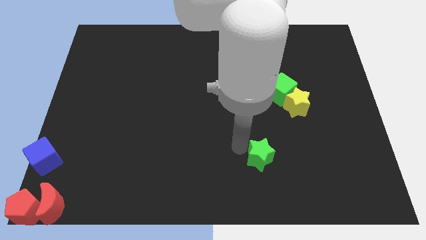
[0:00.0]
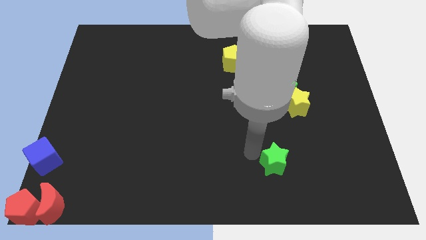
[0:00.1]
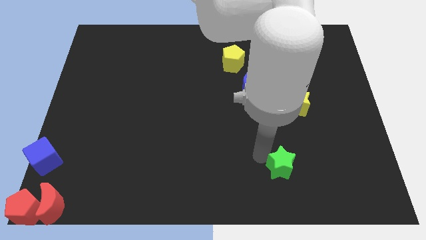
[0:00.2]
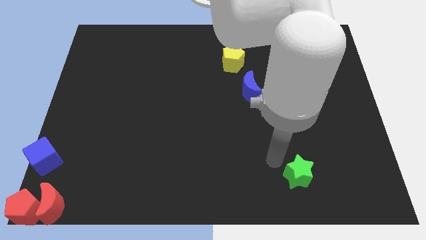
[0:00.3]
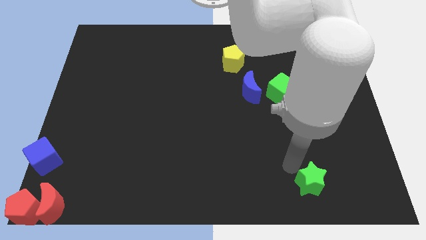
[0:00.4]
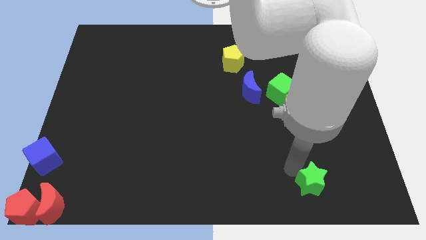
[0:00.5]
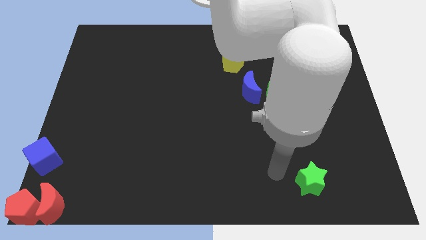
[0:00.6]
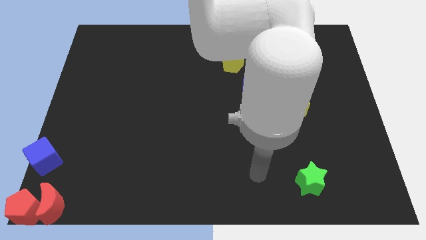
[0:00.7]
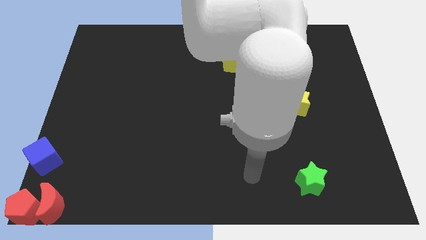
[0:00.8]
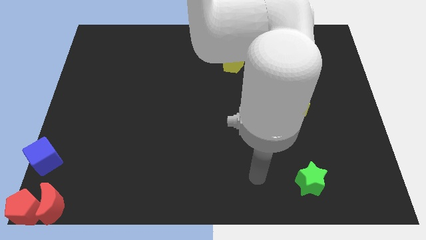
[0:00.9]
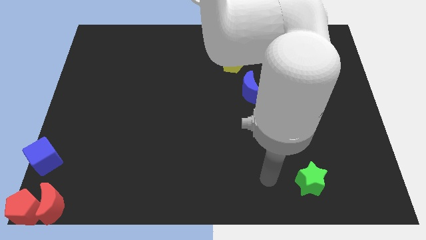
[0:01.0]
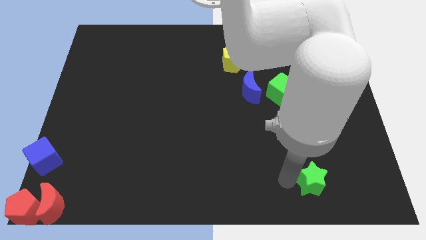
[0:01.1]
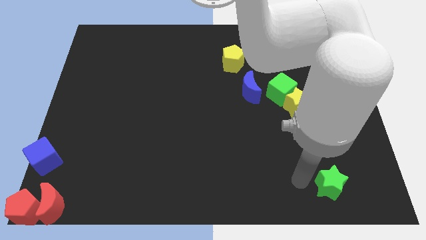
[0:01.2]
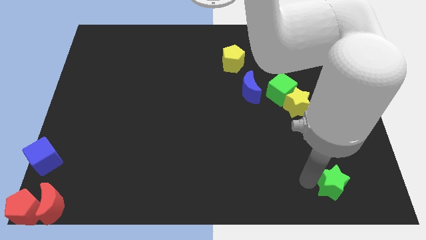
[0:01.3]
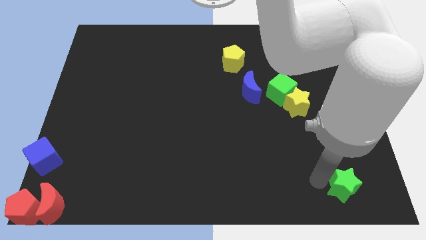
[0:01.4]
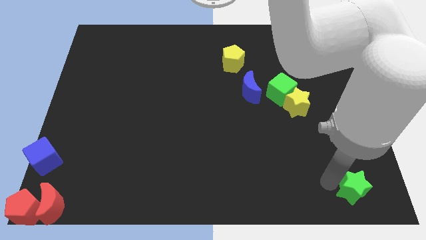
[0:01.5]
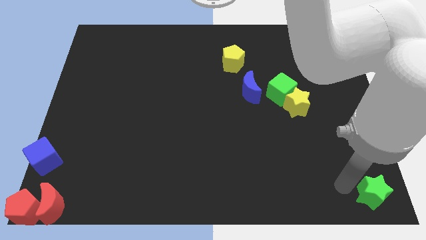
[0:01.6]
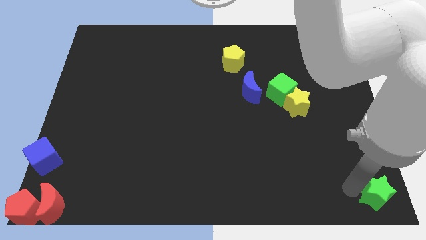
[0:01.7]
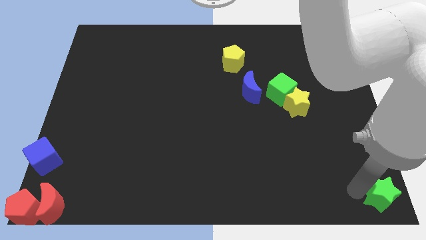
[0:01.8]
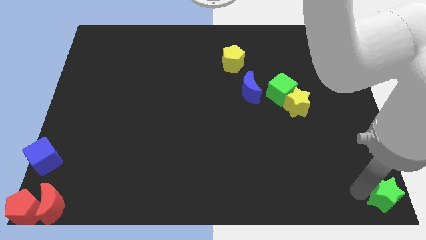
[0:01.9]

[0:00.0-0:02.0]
push the green star towards the bottom right of the board

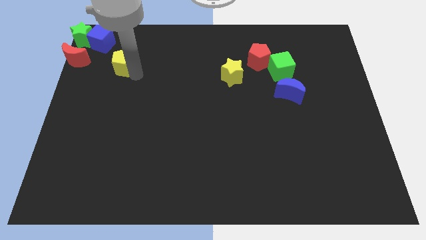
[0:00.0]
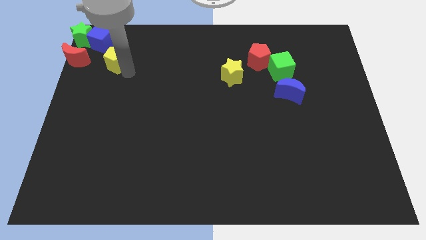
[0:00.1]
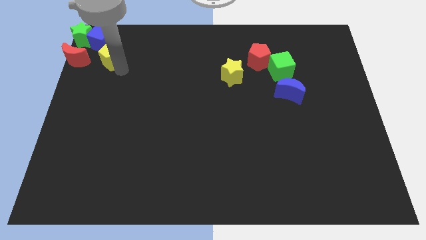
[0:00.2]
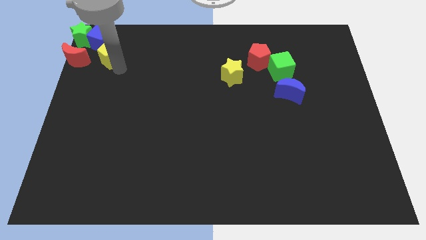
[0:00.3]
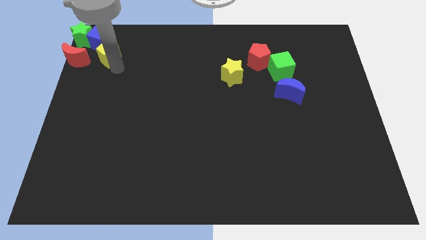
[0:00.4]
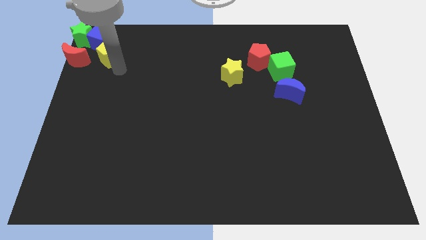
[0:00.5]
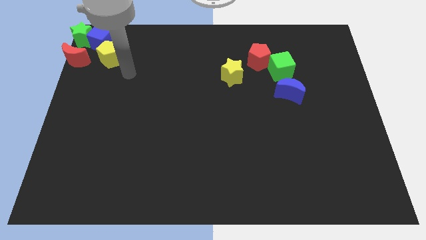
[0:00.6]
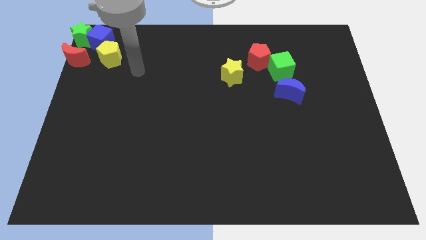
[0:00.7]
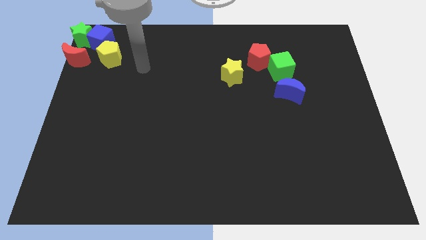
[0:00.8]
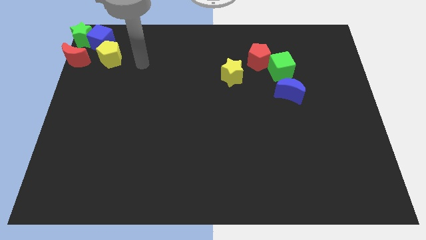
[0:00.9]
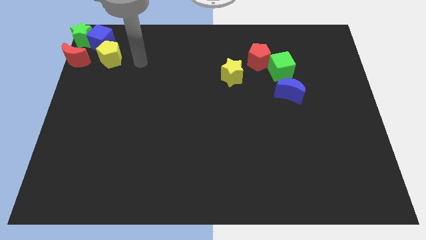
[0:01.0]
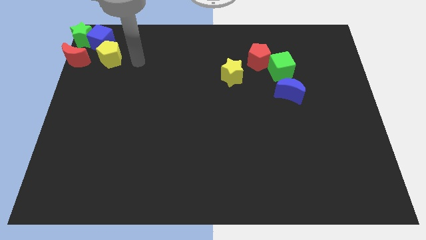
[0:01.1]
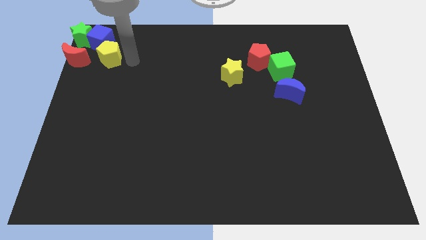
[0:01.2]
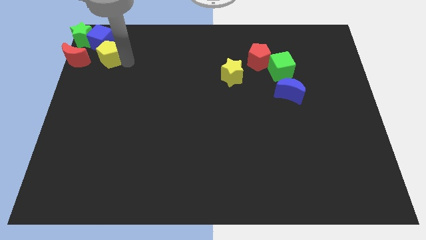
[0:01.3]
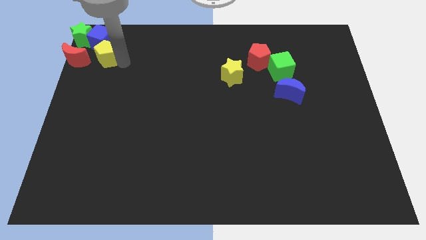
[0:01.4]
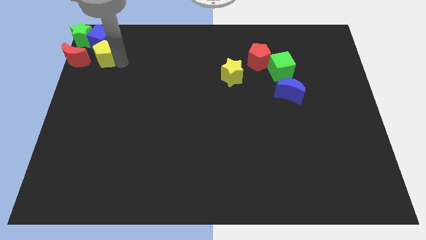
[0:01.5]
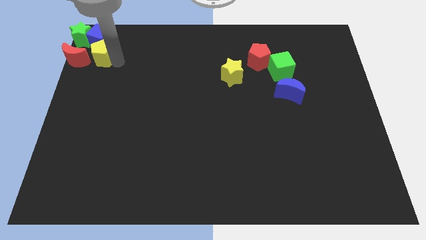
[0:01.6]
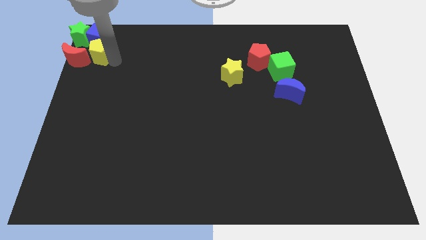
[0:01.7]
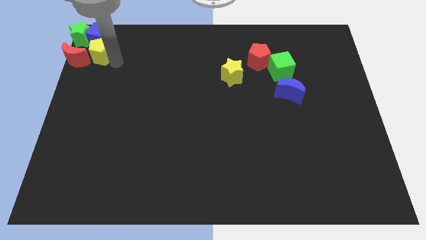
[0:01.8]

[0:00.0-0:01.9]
push the yellow pentagon to the right of the red crescent

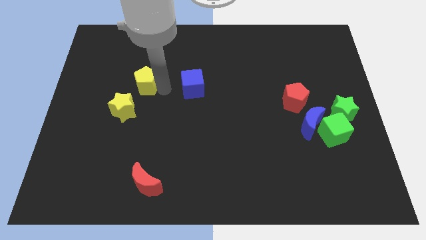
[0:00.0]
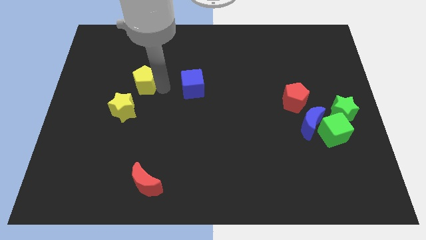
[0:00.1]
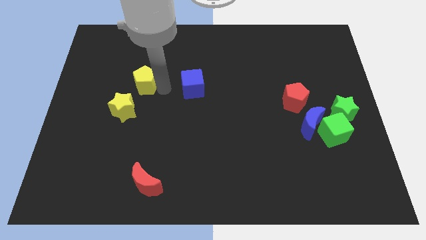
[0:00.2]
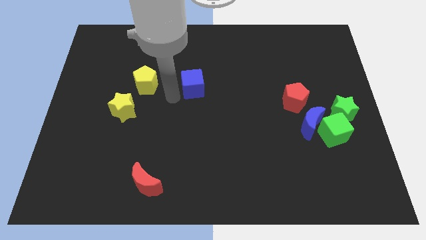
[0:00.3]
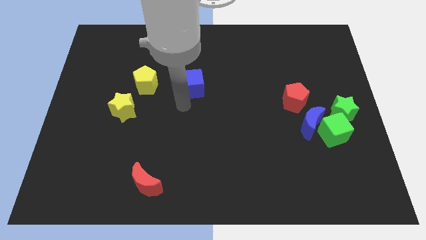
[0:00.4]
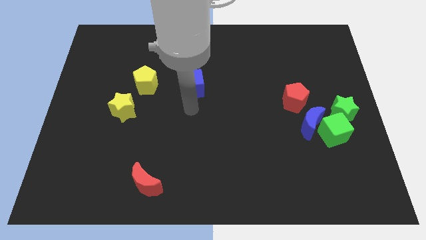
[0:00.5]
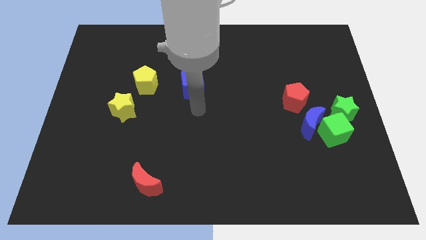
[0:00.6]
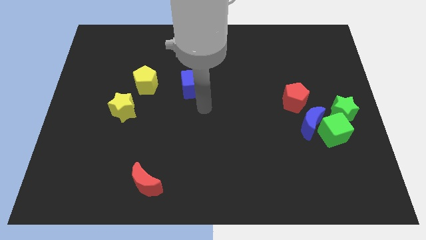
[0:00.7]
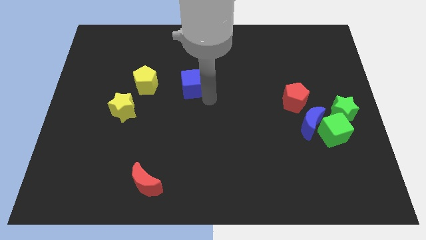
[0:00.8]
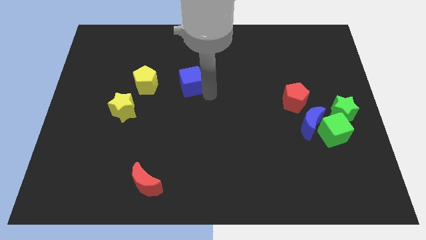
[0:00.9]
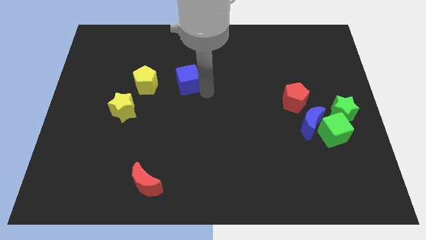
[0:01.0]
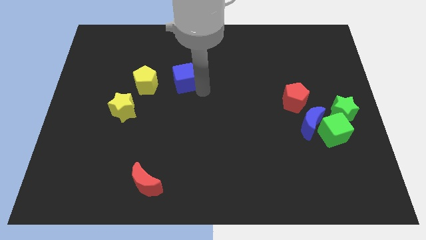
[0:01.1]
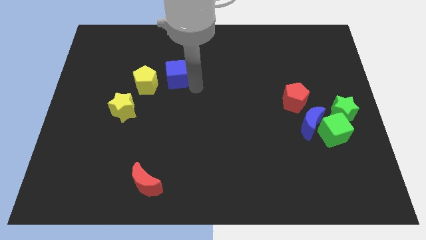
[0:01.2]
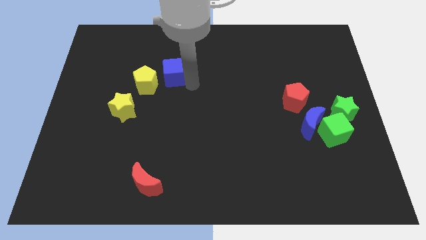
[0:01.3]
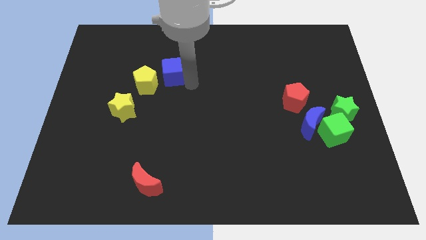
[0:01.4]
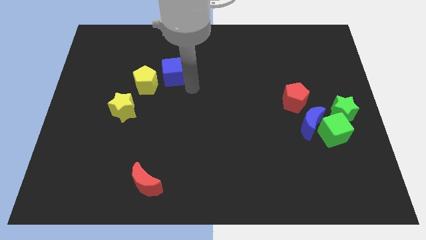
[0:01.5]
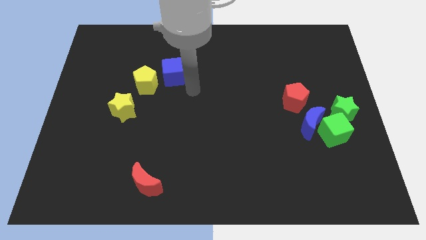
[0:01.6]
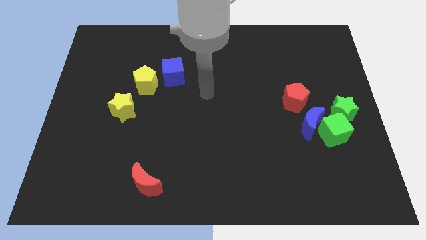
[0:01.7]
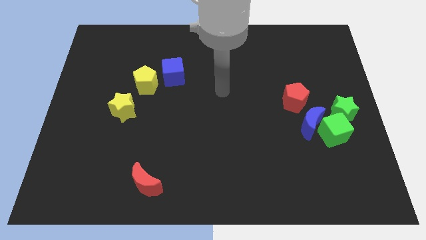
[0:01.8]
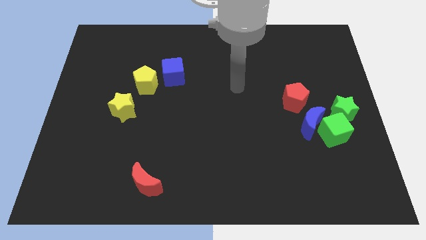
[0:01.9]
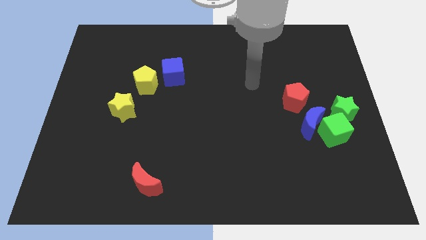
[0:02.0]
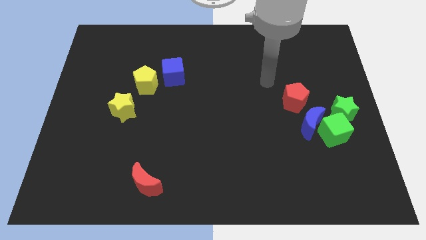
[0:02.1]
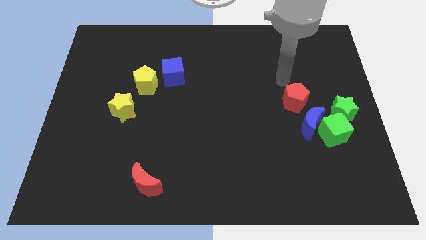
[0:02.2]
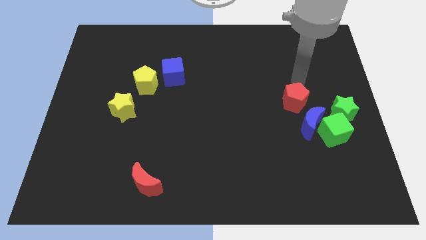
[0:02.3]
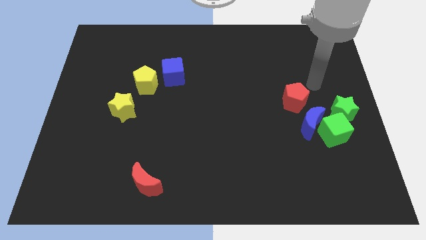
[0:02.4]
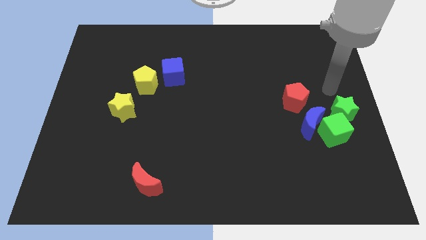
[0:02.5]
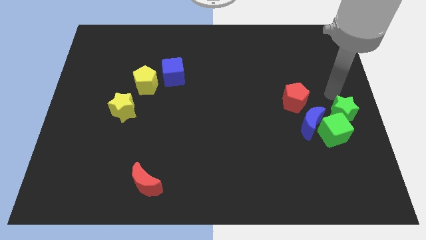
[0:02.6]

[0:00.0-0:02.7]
move the blue cube to the right of the yellow pentagon

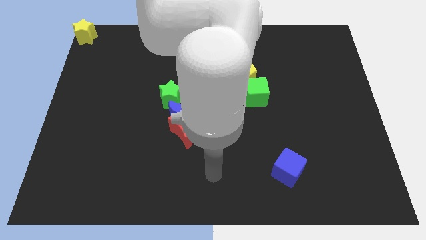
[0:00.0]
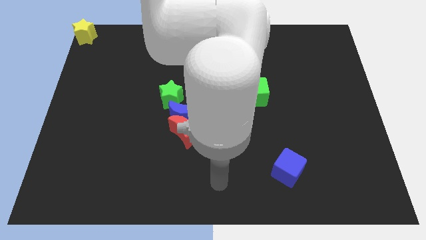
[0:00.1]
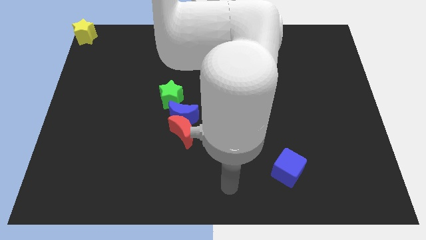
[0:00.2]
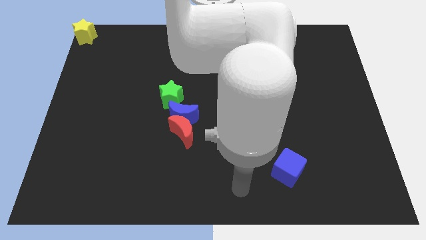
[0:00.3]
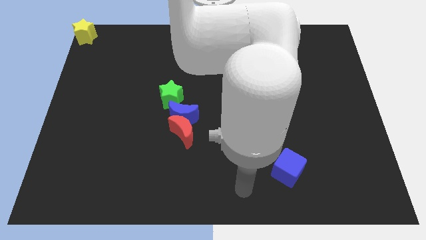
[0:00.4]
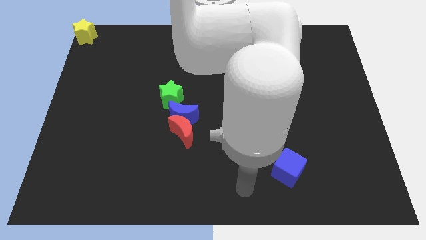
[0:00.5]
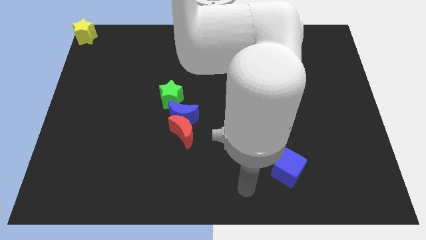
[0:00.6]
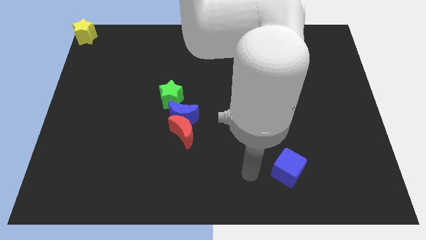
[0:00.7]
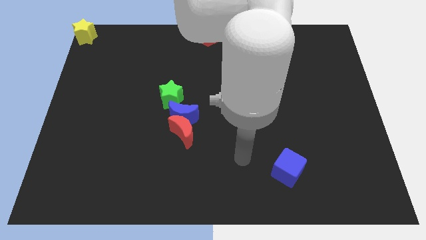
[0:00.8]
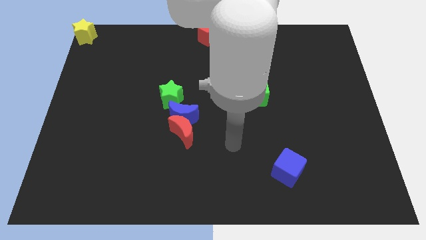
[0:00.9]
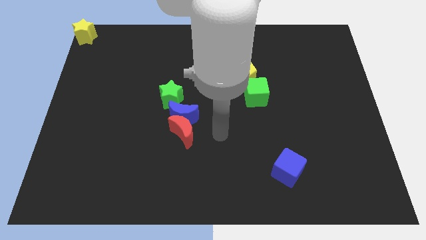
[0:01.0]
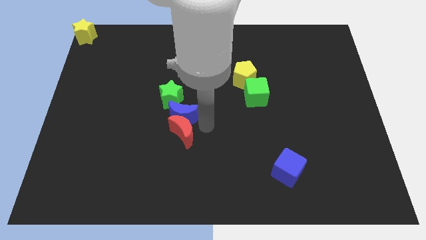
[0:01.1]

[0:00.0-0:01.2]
point your arm to the right side of red moon

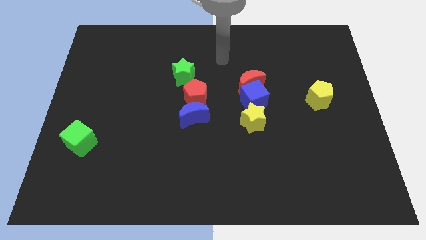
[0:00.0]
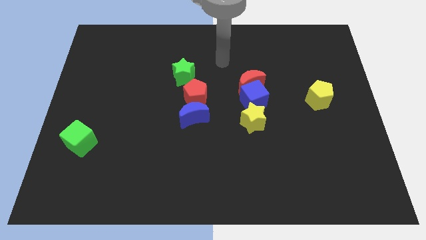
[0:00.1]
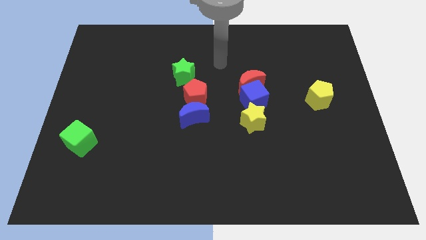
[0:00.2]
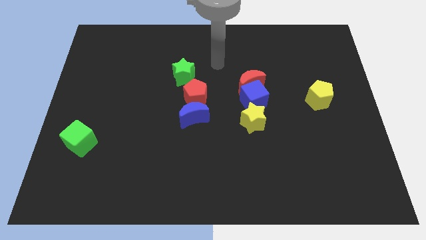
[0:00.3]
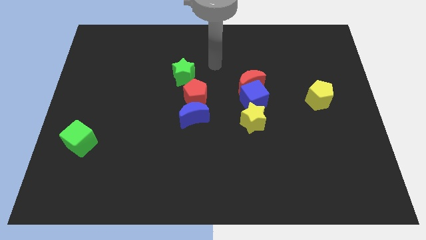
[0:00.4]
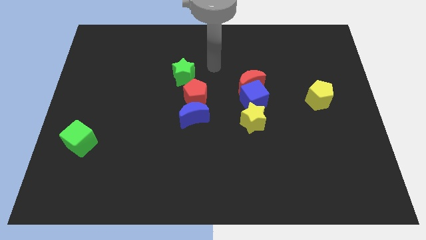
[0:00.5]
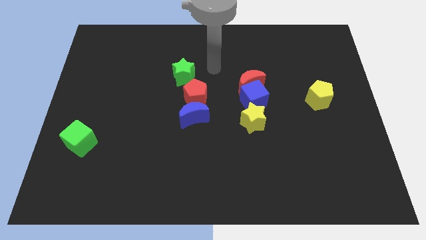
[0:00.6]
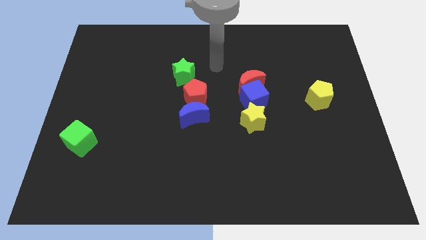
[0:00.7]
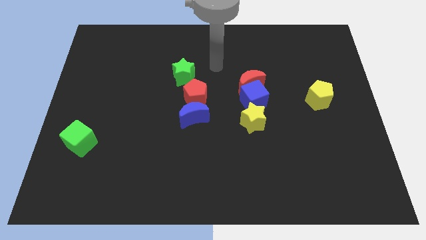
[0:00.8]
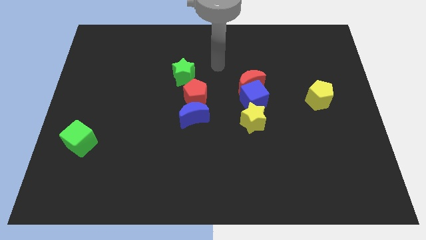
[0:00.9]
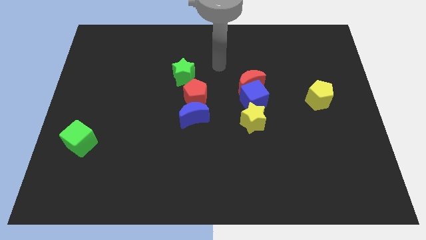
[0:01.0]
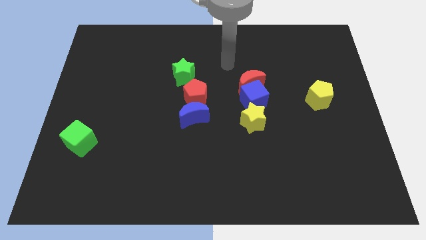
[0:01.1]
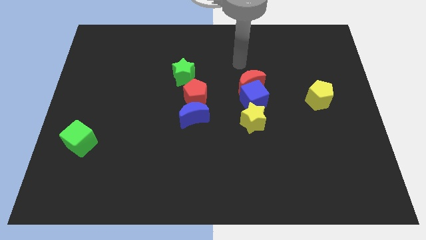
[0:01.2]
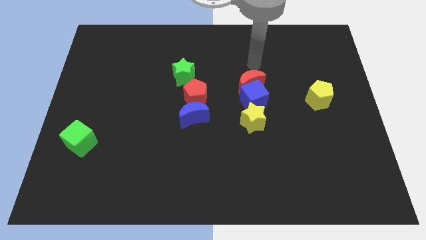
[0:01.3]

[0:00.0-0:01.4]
move your arm to the top of the red crescent
